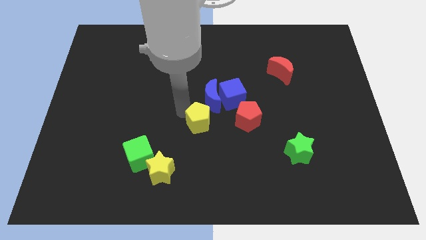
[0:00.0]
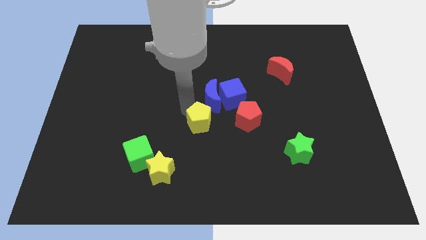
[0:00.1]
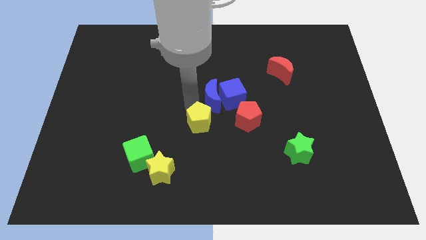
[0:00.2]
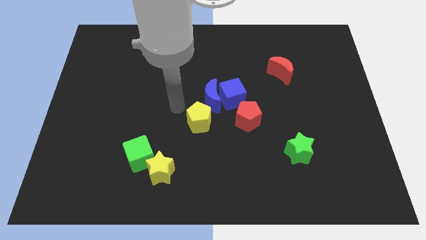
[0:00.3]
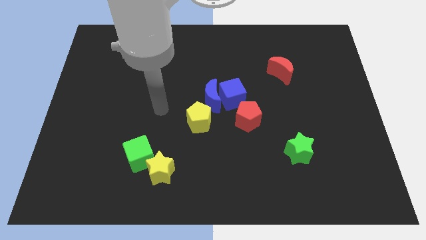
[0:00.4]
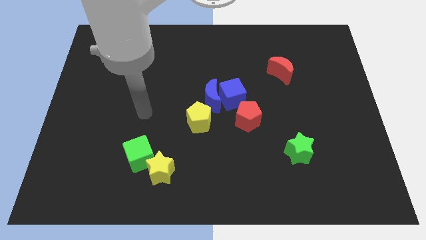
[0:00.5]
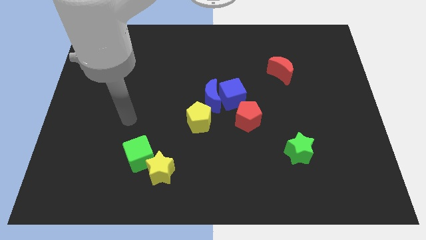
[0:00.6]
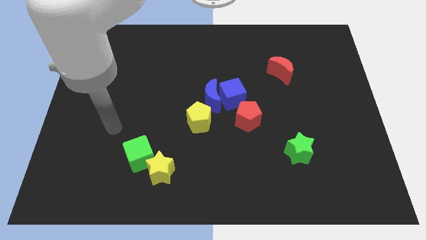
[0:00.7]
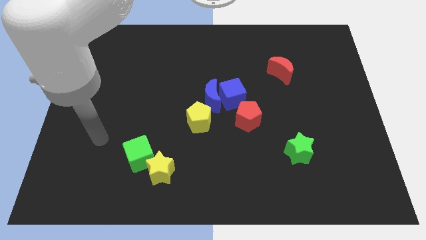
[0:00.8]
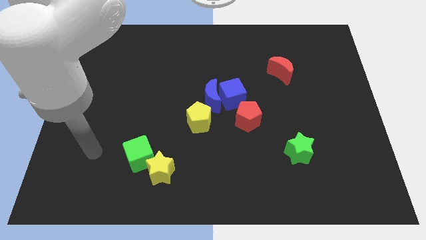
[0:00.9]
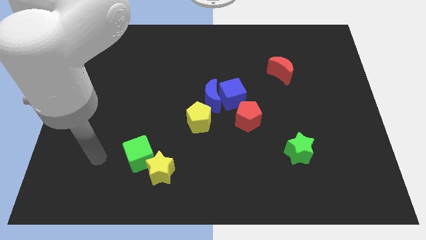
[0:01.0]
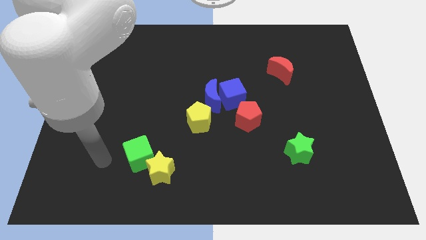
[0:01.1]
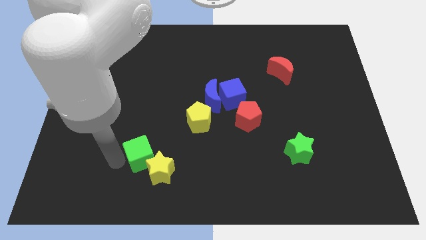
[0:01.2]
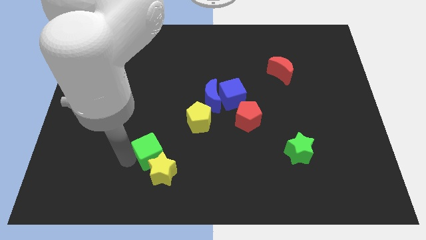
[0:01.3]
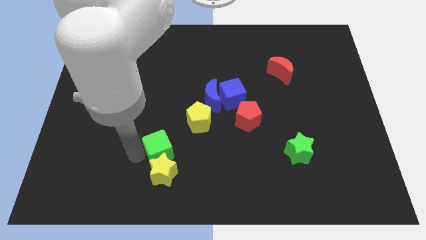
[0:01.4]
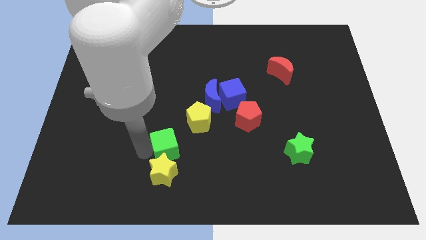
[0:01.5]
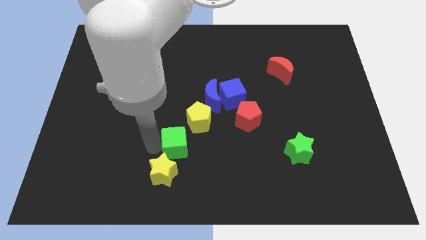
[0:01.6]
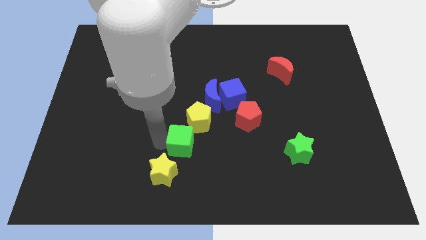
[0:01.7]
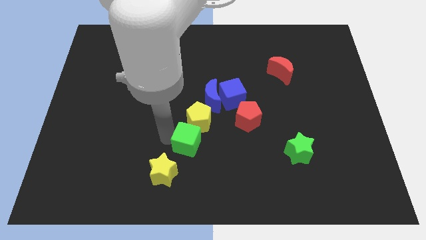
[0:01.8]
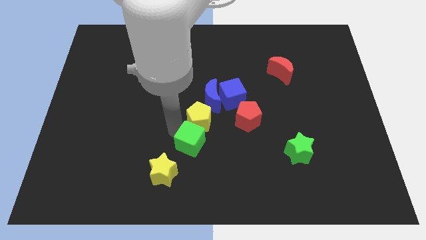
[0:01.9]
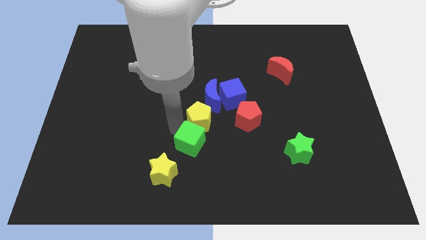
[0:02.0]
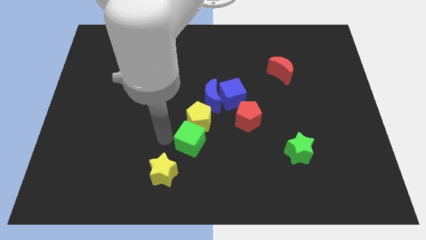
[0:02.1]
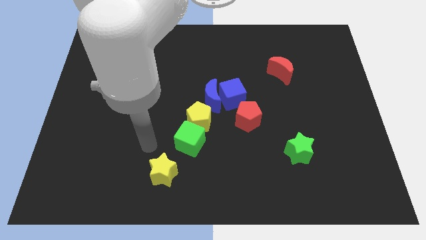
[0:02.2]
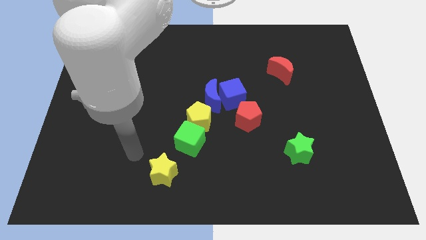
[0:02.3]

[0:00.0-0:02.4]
move the green star into the yellow pentagon

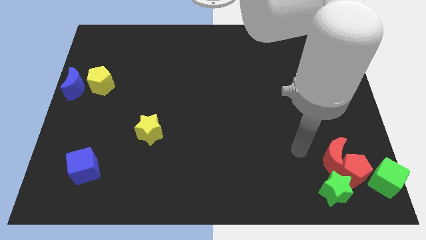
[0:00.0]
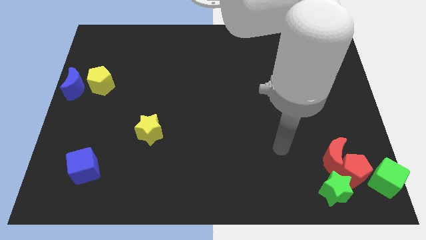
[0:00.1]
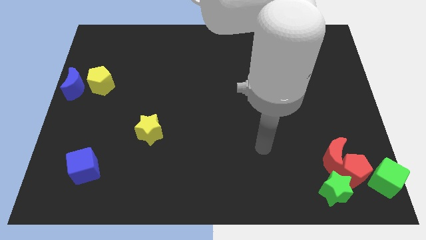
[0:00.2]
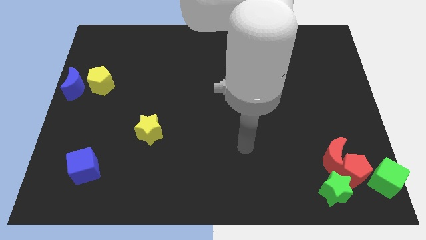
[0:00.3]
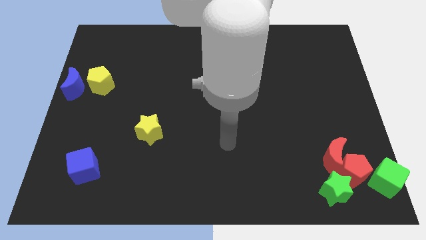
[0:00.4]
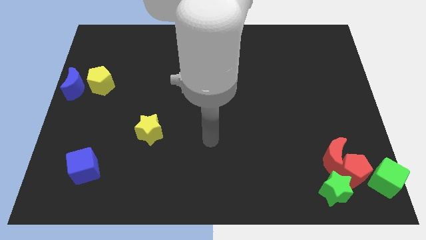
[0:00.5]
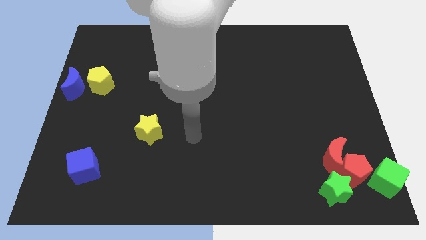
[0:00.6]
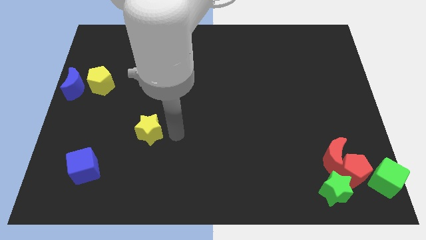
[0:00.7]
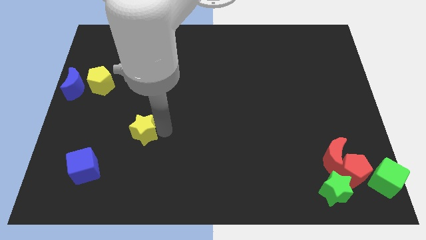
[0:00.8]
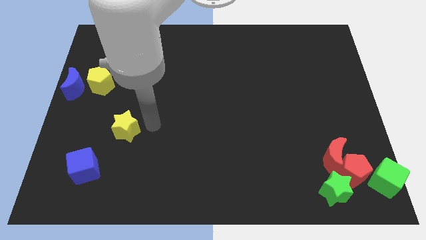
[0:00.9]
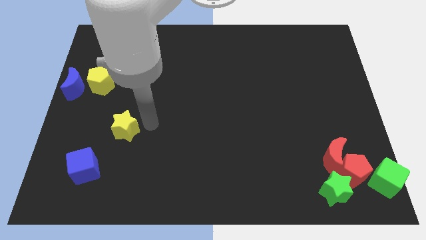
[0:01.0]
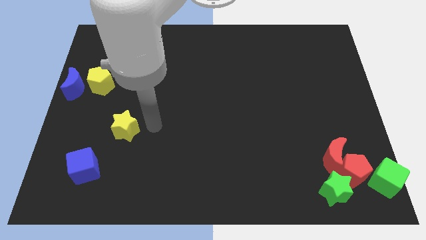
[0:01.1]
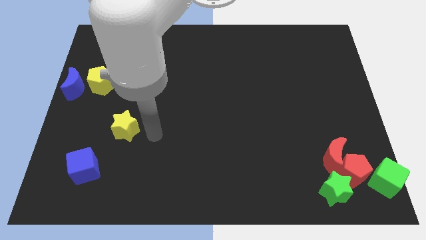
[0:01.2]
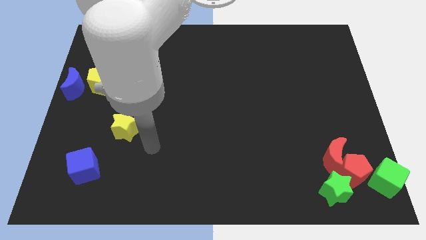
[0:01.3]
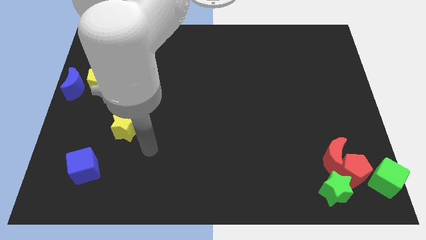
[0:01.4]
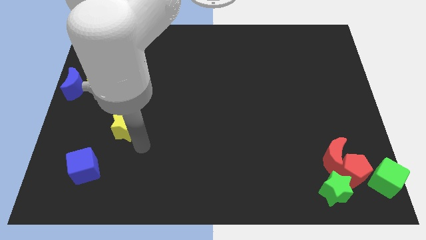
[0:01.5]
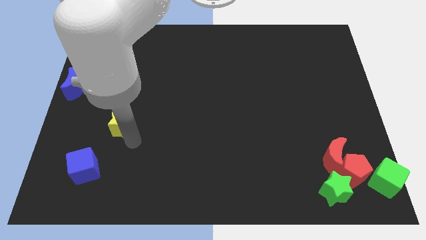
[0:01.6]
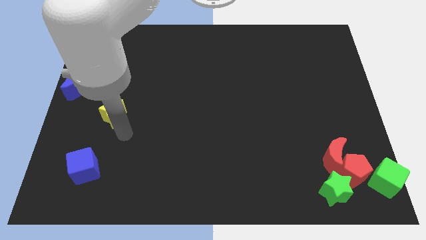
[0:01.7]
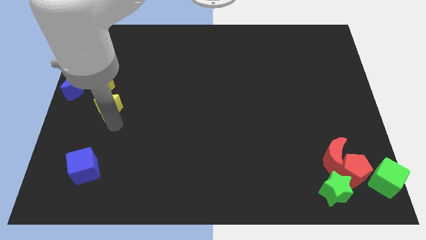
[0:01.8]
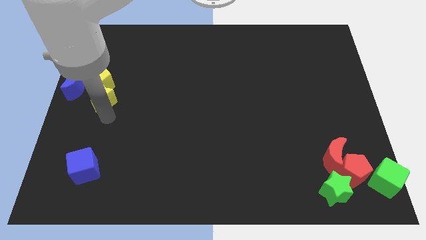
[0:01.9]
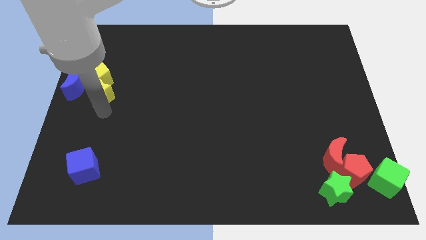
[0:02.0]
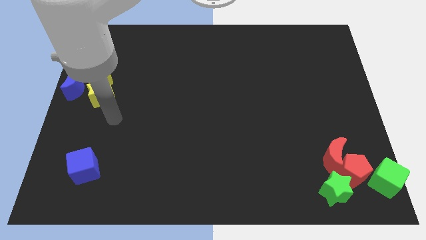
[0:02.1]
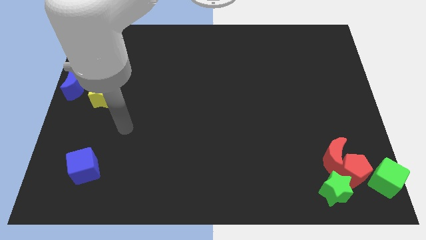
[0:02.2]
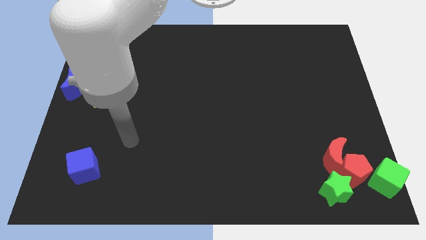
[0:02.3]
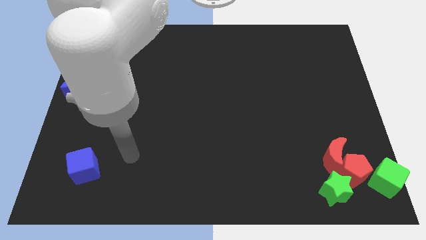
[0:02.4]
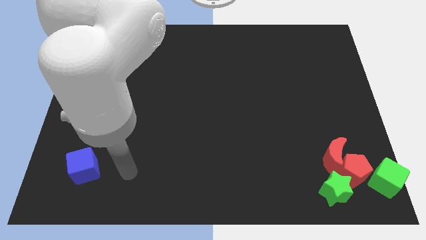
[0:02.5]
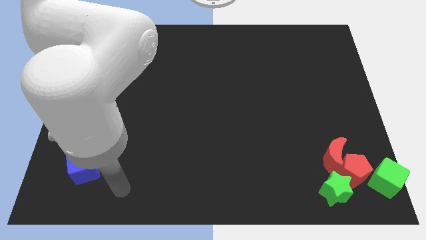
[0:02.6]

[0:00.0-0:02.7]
push the yellow star into the yellow pentagon

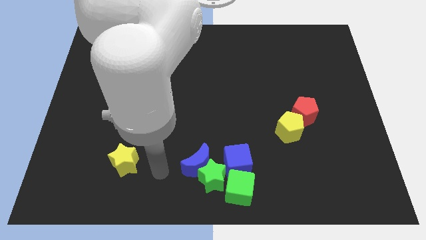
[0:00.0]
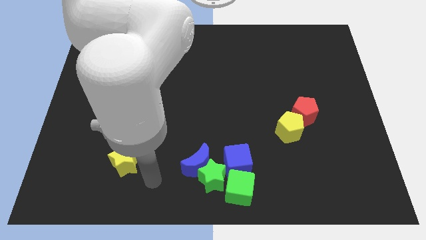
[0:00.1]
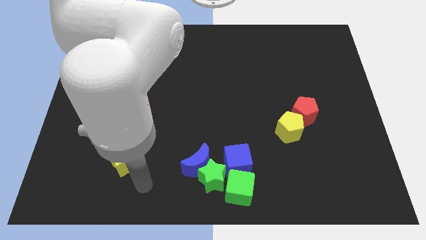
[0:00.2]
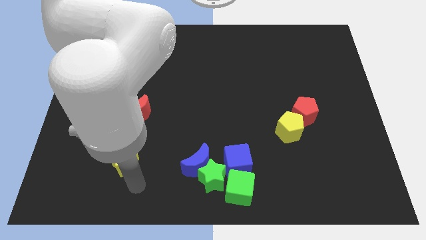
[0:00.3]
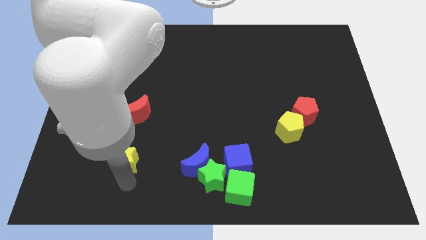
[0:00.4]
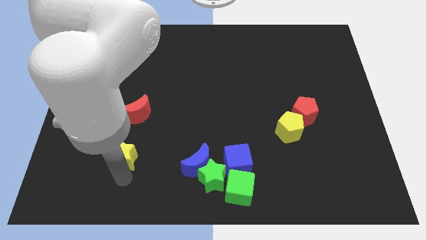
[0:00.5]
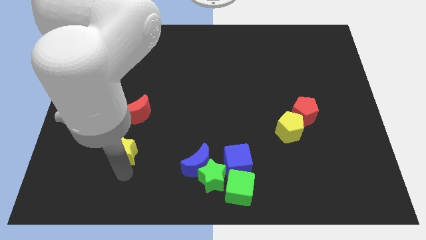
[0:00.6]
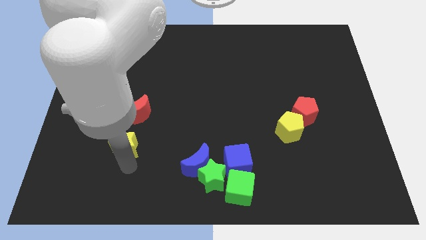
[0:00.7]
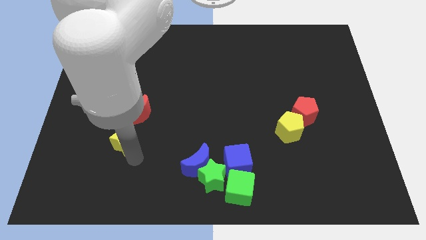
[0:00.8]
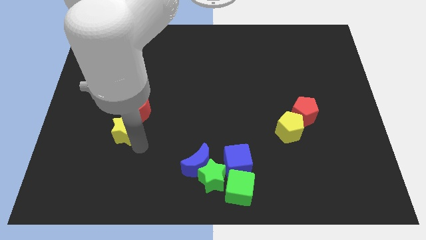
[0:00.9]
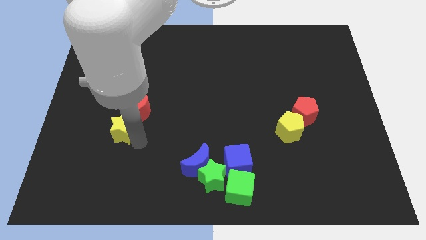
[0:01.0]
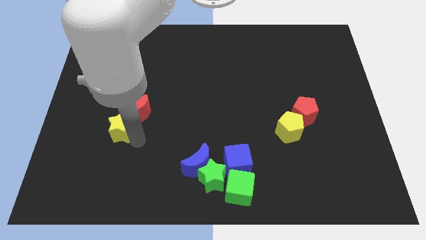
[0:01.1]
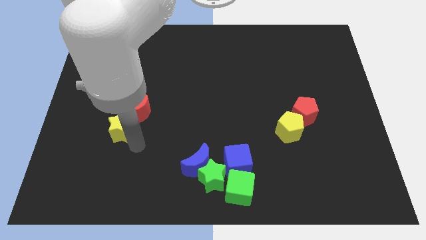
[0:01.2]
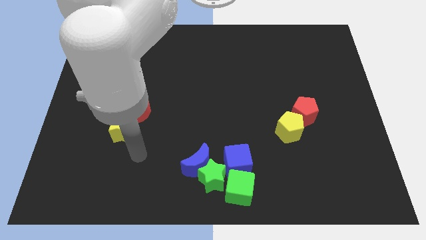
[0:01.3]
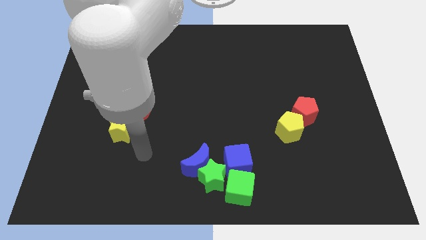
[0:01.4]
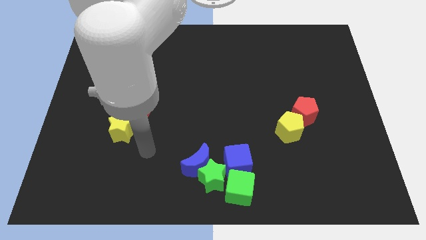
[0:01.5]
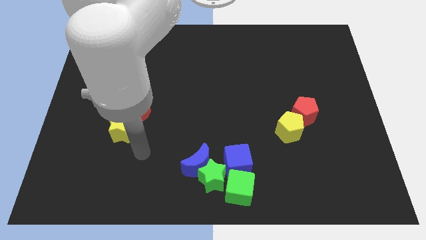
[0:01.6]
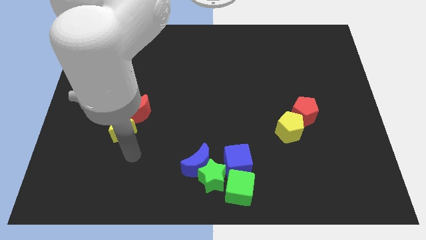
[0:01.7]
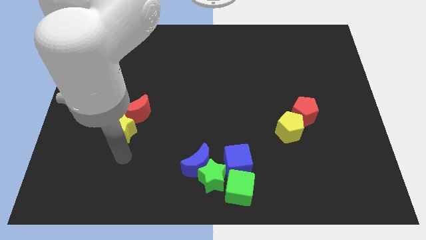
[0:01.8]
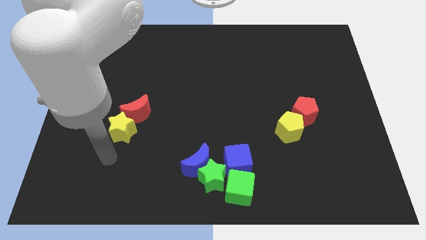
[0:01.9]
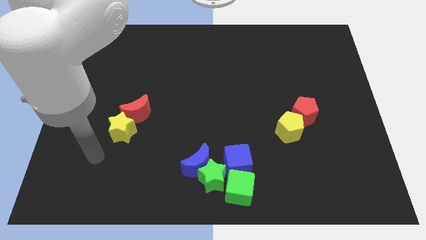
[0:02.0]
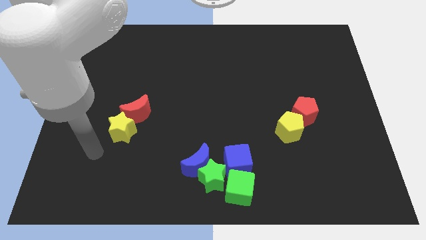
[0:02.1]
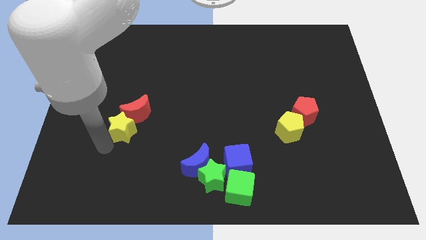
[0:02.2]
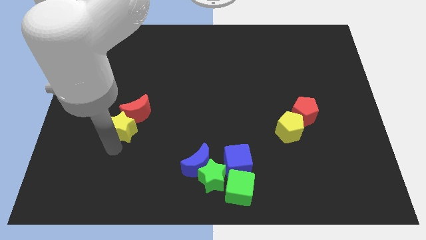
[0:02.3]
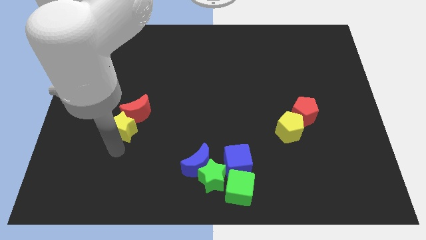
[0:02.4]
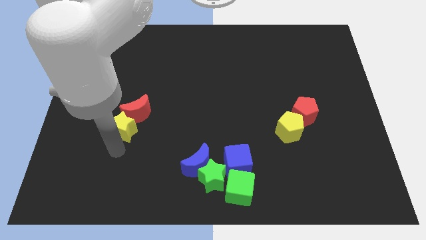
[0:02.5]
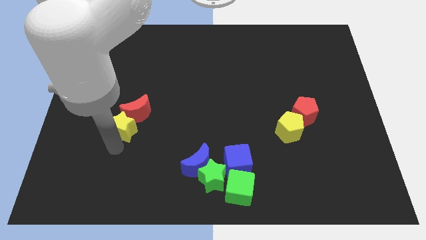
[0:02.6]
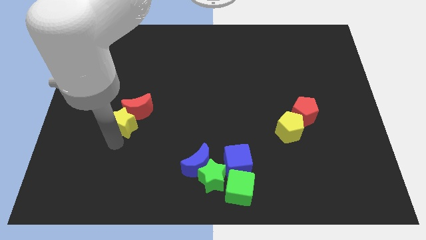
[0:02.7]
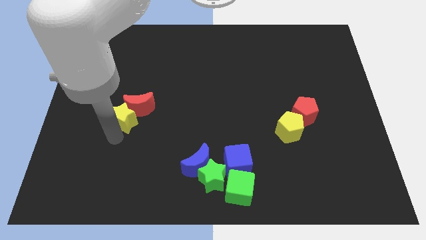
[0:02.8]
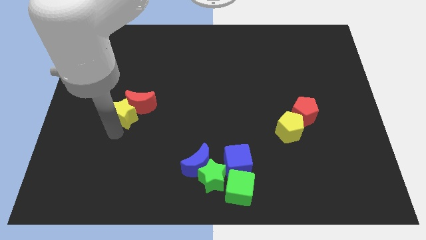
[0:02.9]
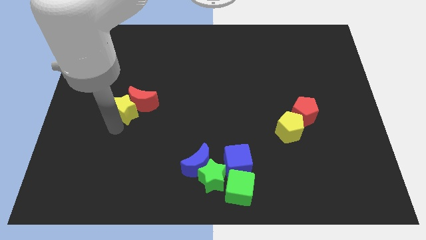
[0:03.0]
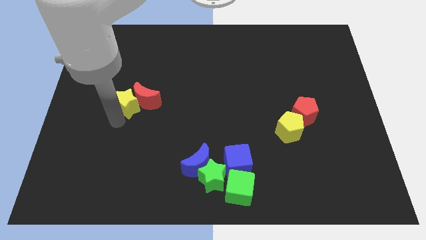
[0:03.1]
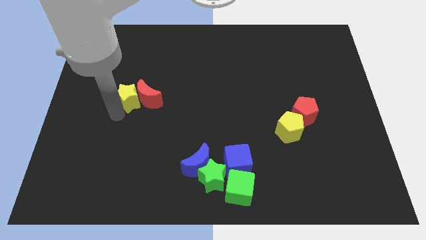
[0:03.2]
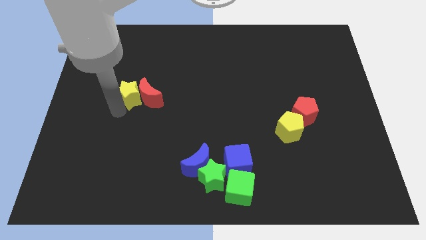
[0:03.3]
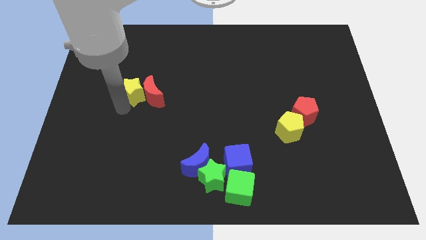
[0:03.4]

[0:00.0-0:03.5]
push the red moon and yellow star towards top

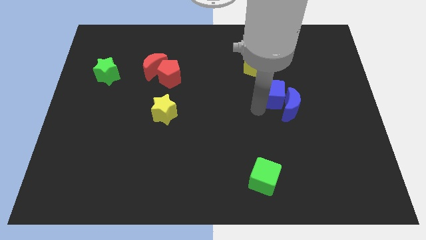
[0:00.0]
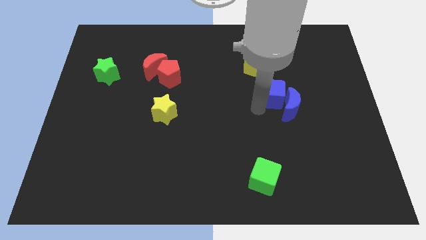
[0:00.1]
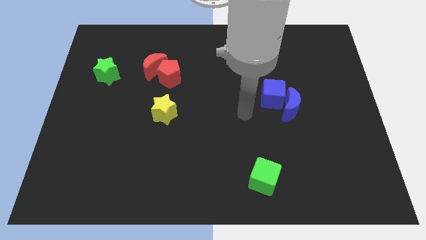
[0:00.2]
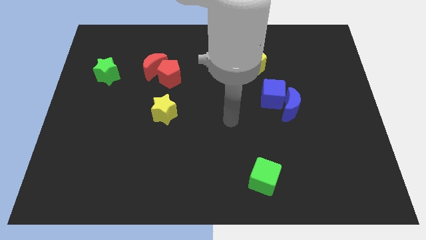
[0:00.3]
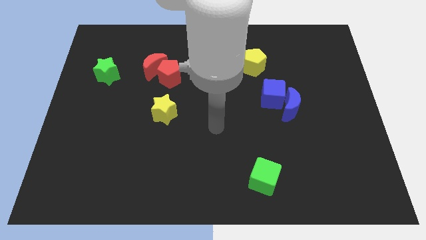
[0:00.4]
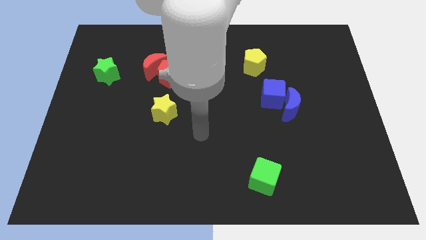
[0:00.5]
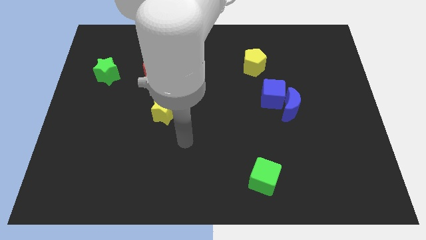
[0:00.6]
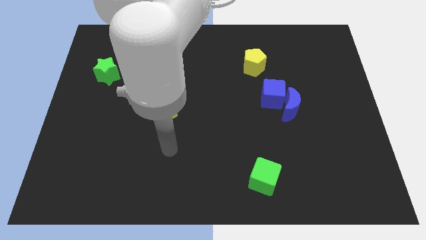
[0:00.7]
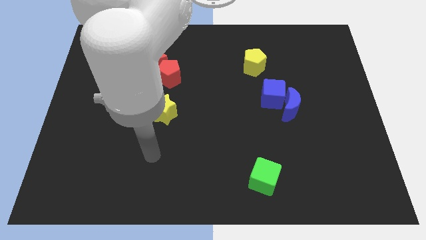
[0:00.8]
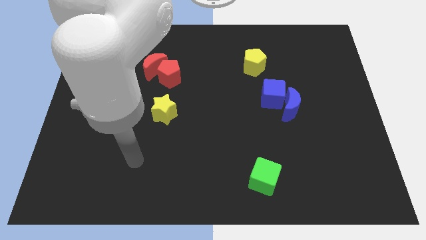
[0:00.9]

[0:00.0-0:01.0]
move your arm away from blue cube
